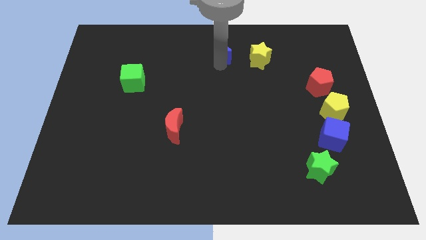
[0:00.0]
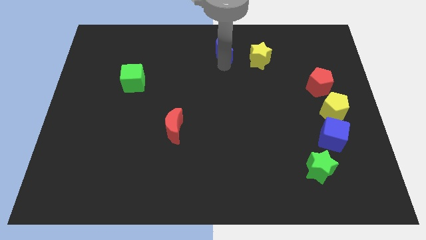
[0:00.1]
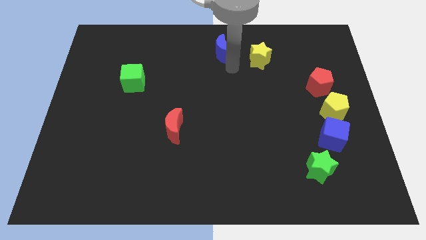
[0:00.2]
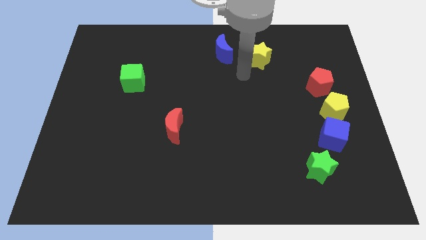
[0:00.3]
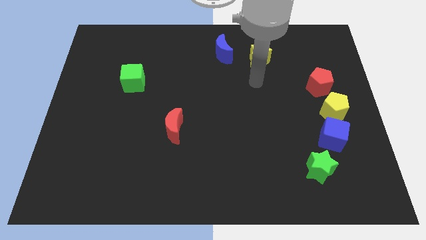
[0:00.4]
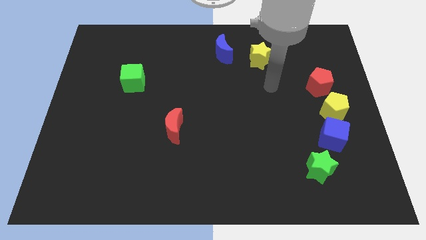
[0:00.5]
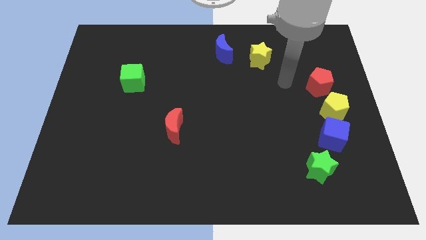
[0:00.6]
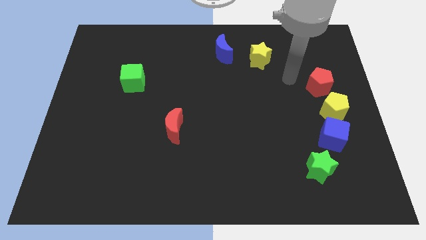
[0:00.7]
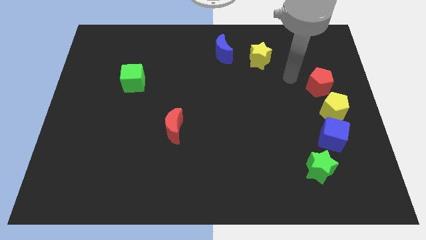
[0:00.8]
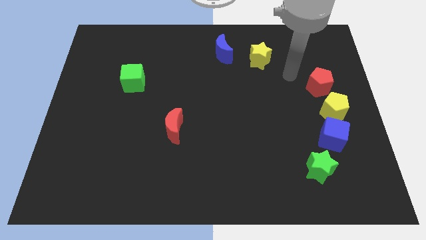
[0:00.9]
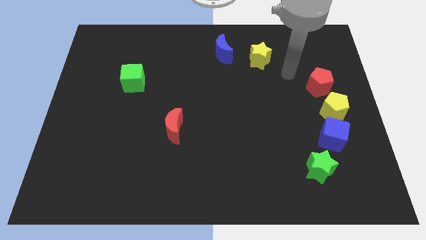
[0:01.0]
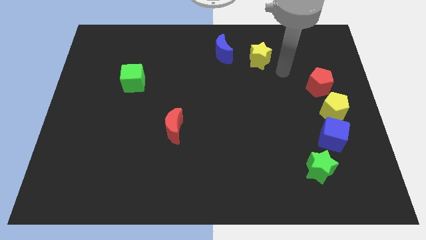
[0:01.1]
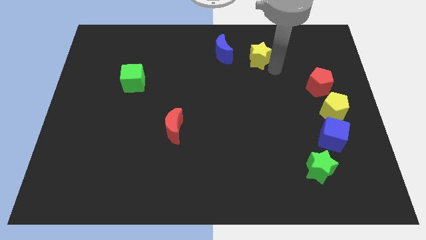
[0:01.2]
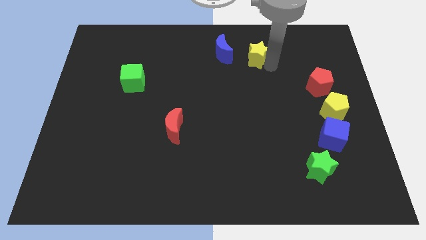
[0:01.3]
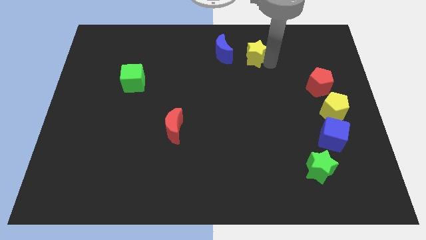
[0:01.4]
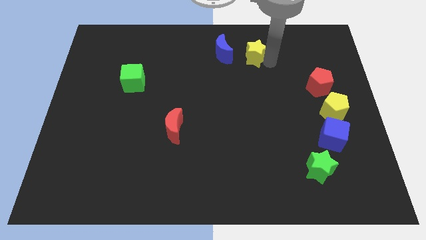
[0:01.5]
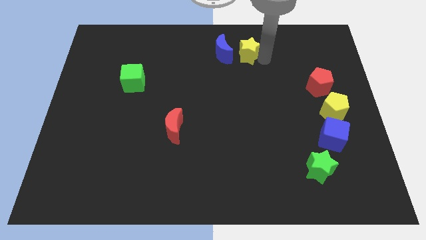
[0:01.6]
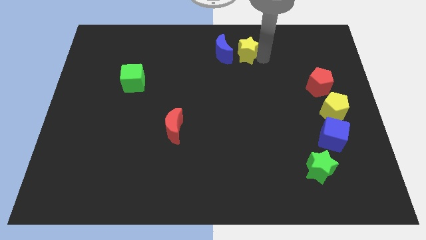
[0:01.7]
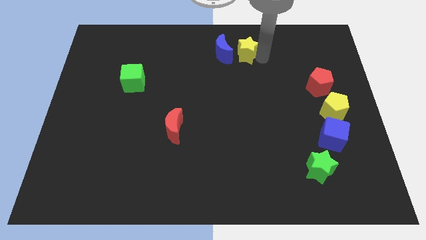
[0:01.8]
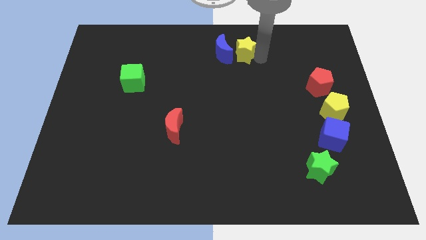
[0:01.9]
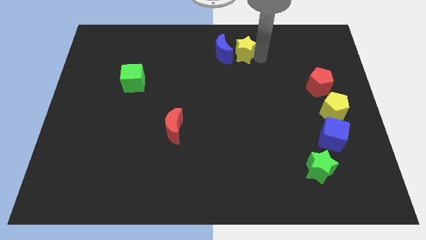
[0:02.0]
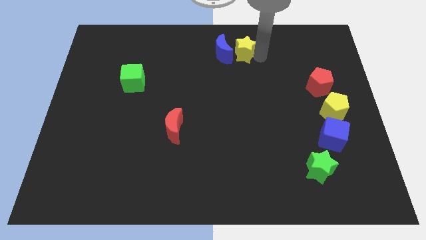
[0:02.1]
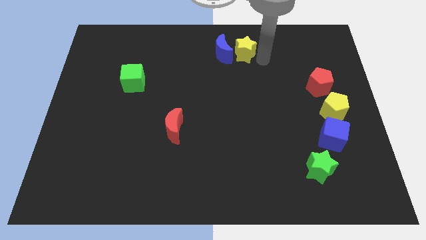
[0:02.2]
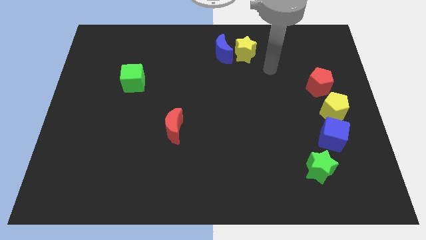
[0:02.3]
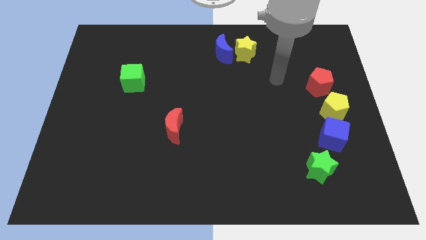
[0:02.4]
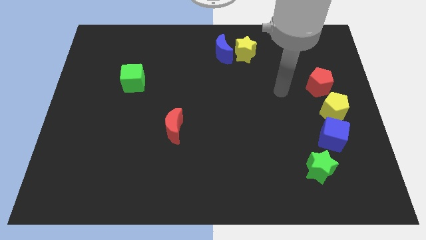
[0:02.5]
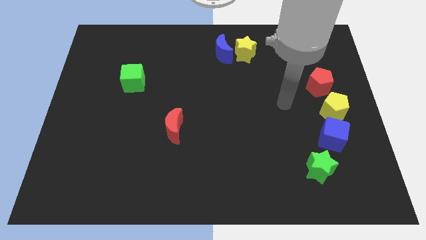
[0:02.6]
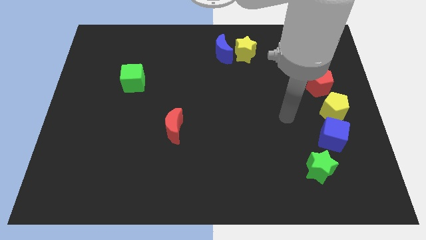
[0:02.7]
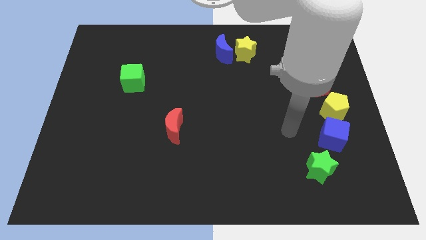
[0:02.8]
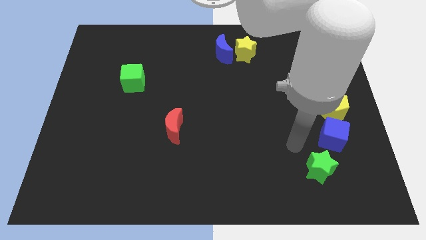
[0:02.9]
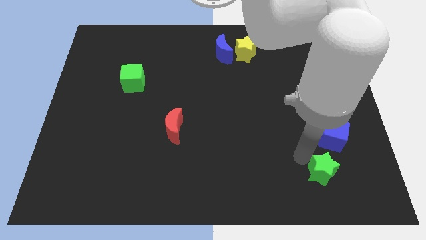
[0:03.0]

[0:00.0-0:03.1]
place the yellow star right to the blue crescent

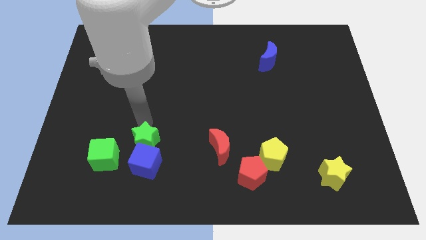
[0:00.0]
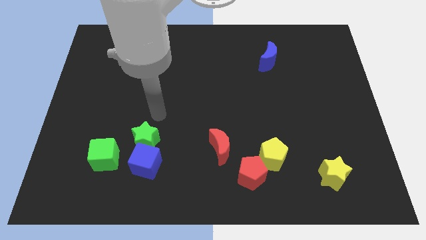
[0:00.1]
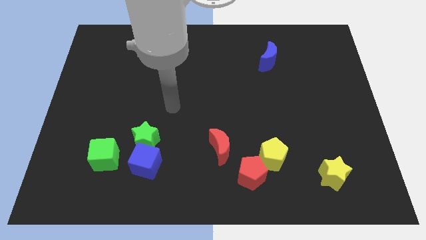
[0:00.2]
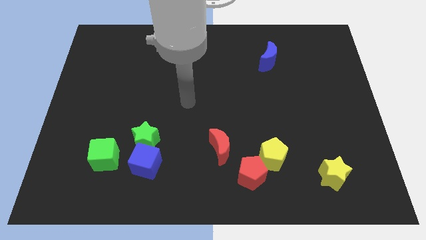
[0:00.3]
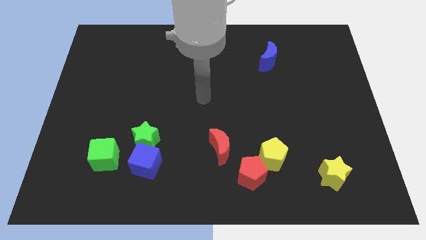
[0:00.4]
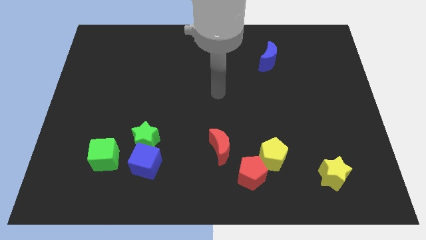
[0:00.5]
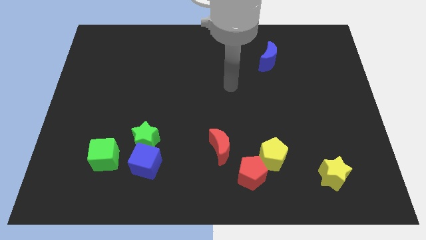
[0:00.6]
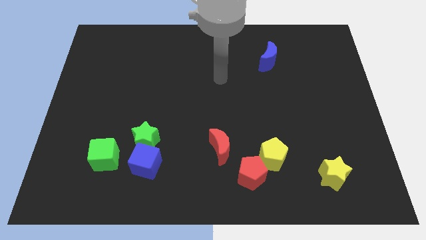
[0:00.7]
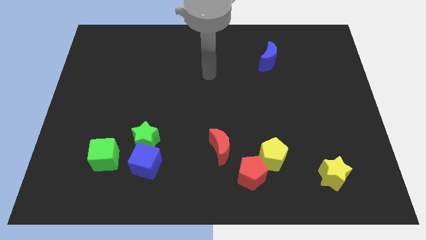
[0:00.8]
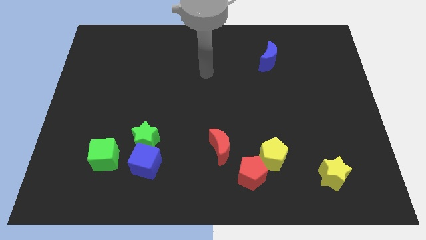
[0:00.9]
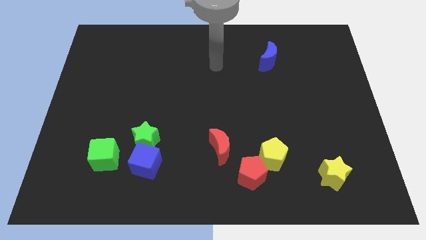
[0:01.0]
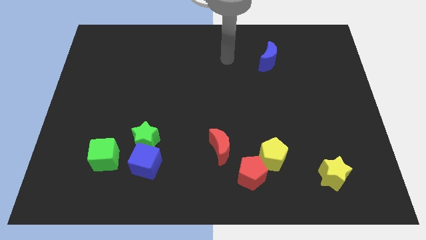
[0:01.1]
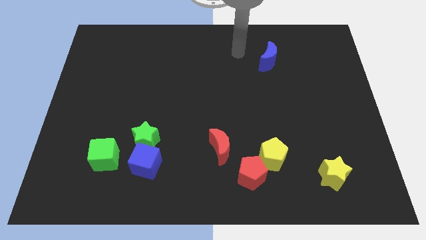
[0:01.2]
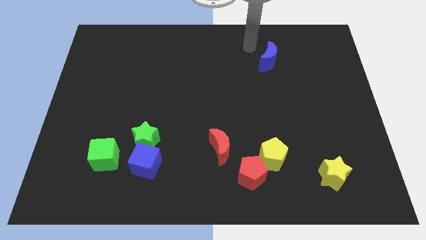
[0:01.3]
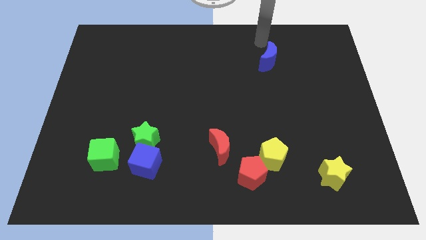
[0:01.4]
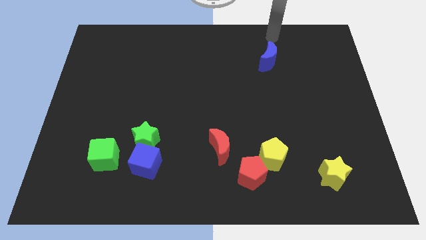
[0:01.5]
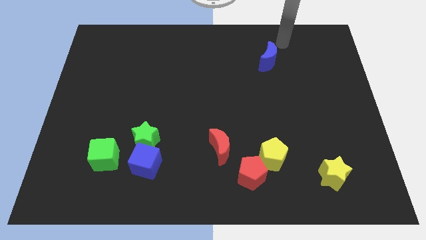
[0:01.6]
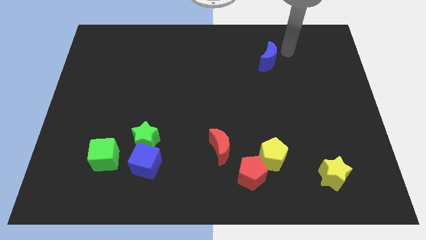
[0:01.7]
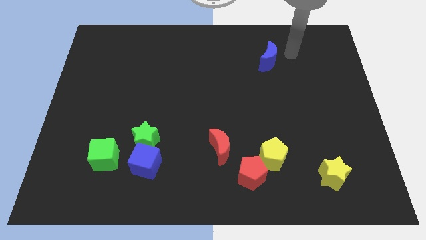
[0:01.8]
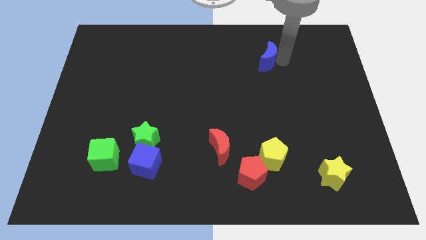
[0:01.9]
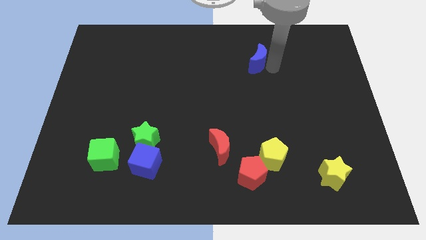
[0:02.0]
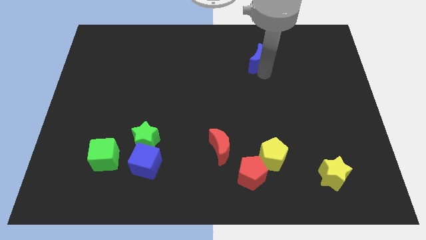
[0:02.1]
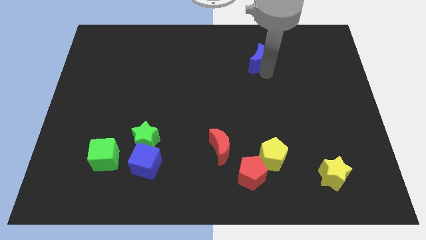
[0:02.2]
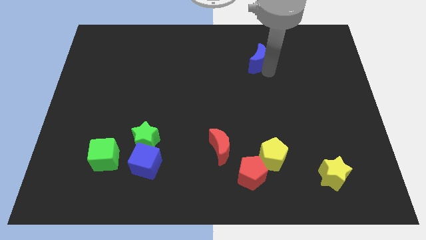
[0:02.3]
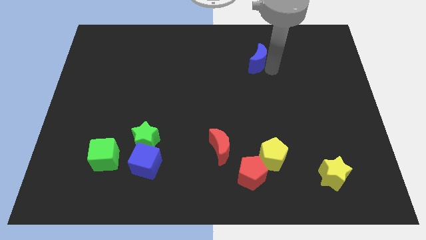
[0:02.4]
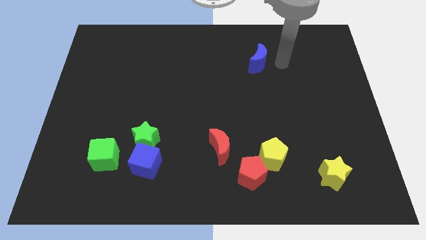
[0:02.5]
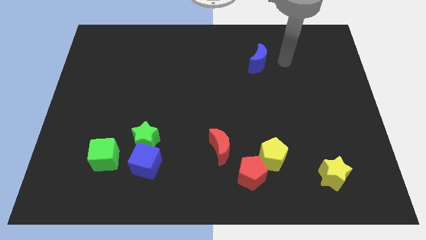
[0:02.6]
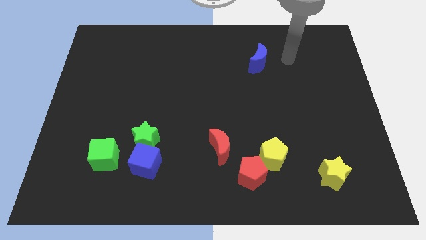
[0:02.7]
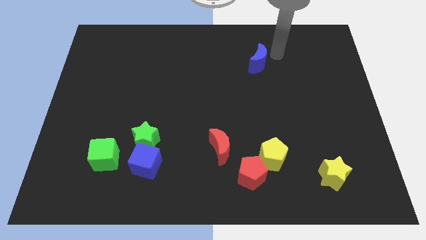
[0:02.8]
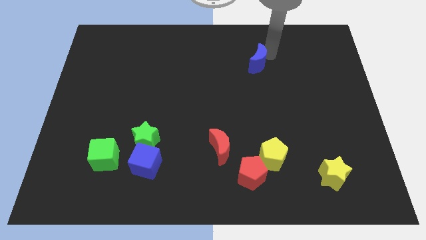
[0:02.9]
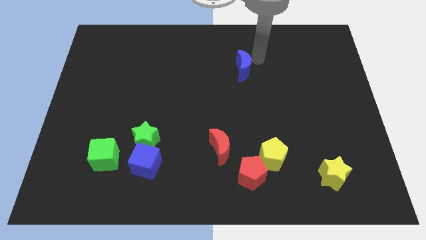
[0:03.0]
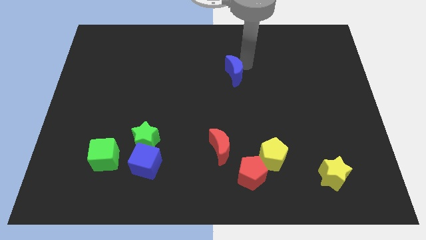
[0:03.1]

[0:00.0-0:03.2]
push the blue crescent slightly towards the left

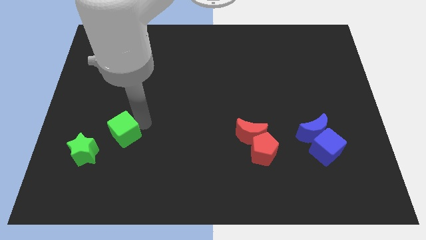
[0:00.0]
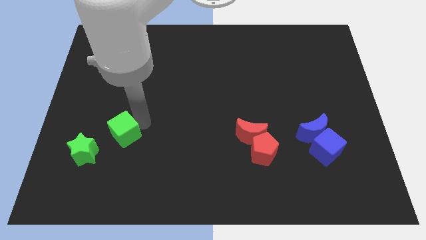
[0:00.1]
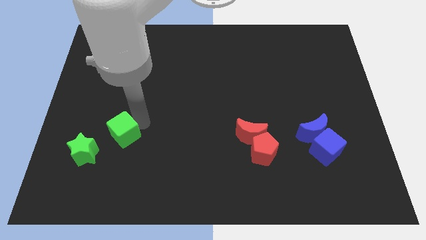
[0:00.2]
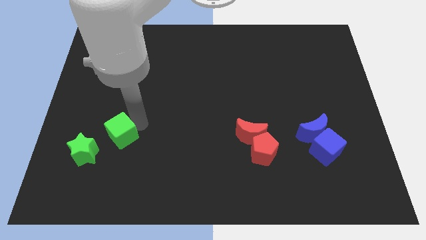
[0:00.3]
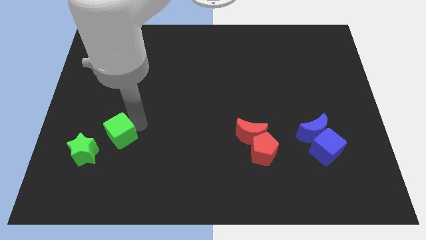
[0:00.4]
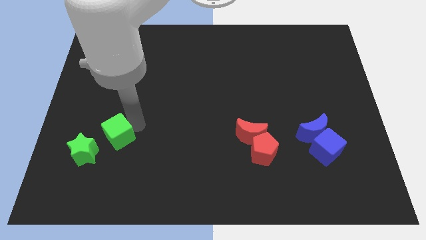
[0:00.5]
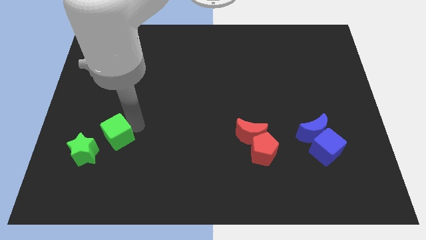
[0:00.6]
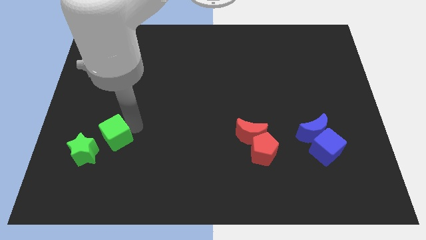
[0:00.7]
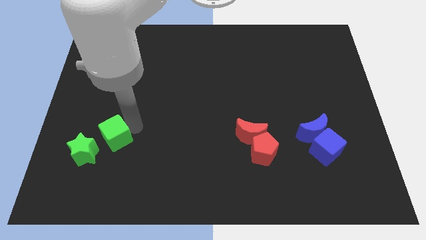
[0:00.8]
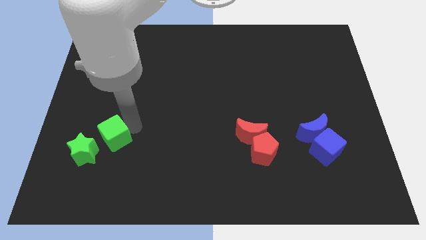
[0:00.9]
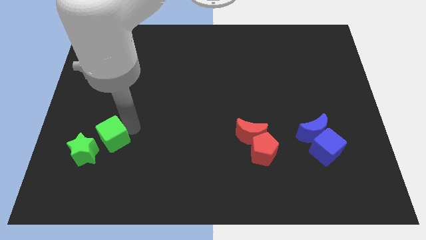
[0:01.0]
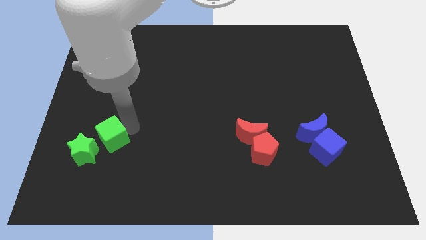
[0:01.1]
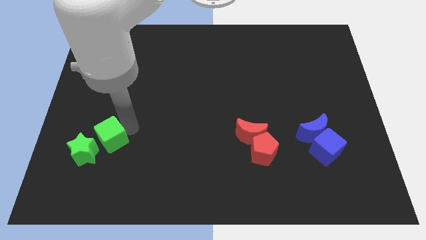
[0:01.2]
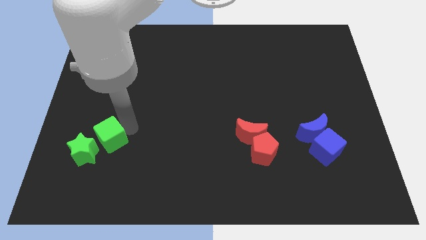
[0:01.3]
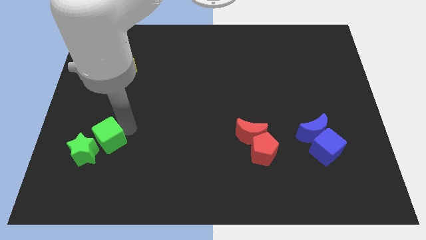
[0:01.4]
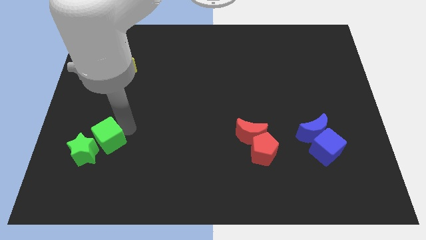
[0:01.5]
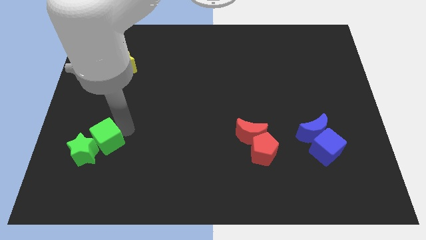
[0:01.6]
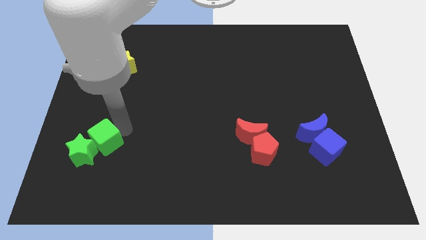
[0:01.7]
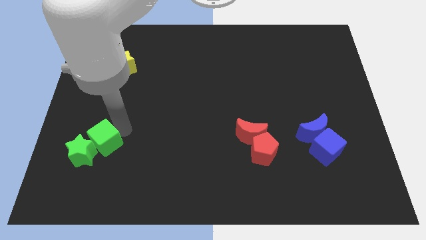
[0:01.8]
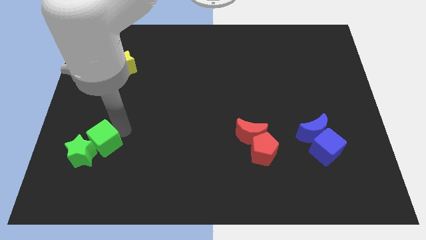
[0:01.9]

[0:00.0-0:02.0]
place green cube near green star

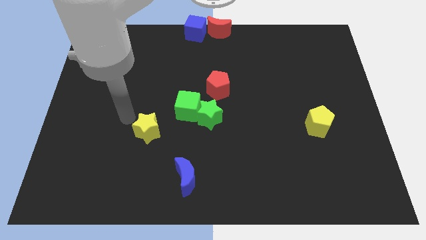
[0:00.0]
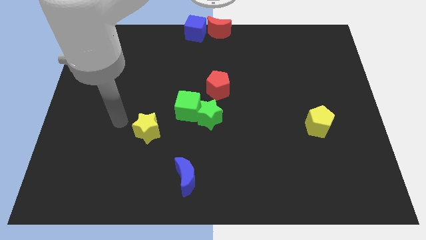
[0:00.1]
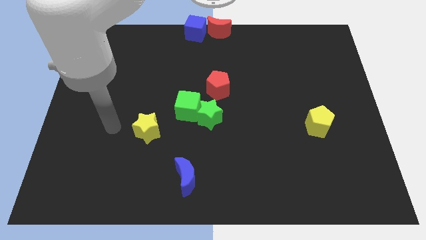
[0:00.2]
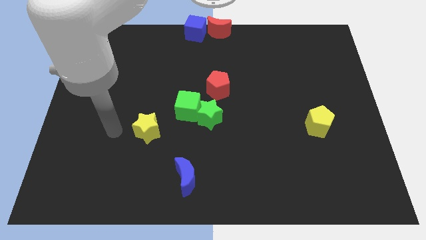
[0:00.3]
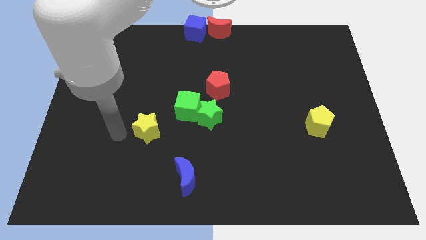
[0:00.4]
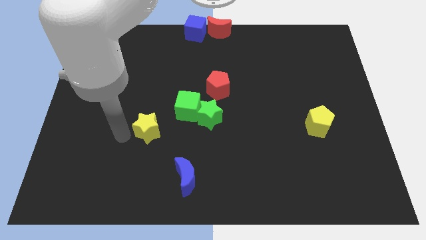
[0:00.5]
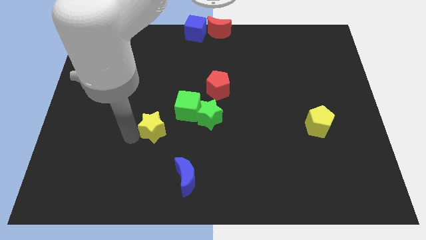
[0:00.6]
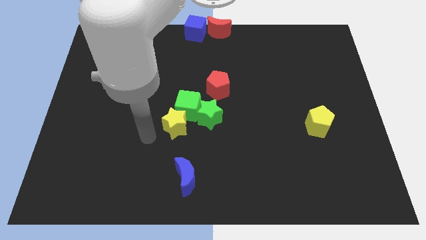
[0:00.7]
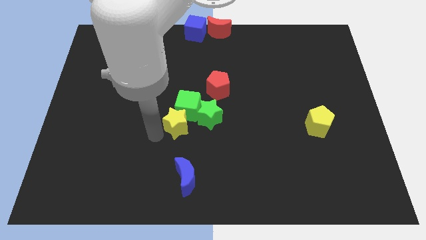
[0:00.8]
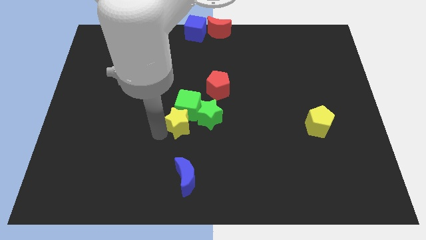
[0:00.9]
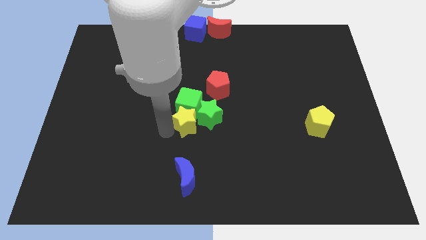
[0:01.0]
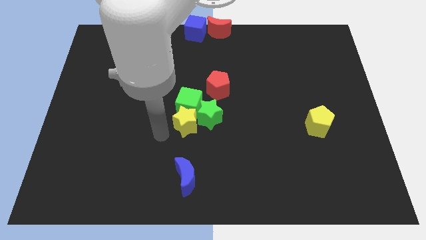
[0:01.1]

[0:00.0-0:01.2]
push the yellow star into the green blocks
